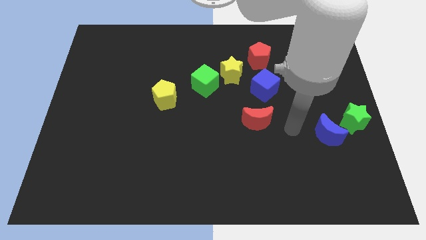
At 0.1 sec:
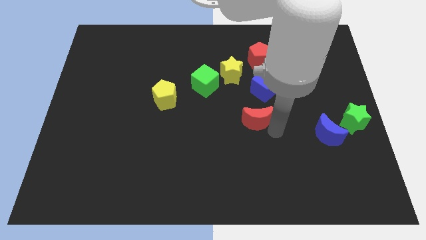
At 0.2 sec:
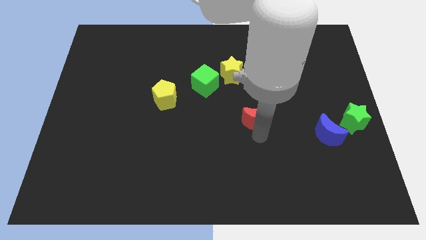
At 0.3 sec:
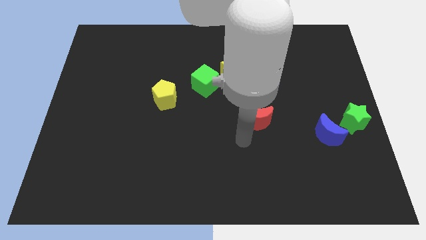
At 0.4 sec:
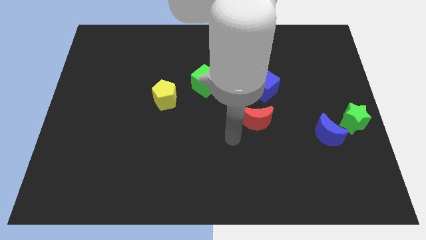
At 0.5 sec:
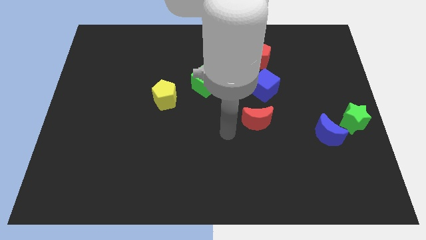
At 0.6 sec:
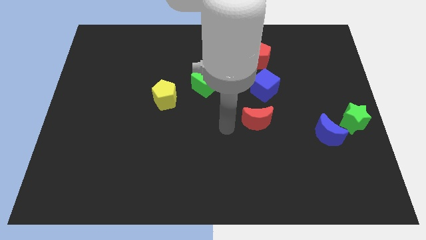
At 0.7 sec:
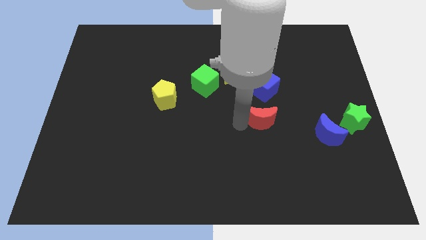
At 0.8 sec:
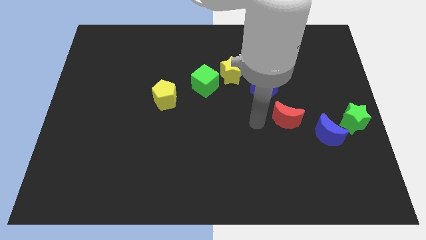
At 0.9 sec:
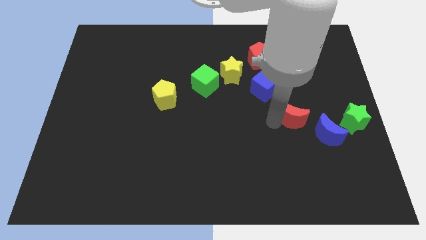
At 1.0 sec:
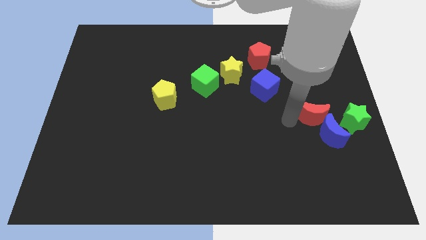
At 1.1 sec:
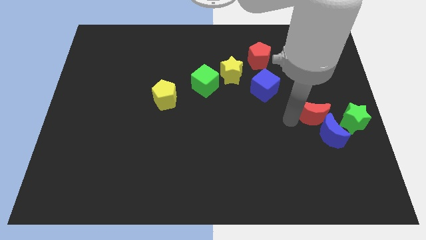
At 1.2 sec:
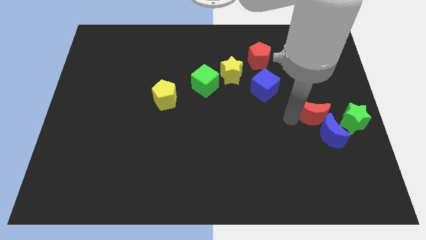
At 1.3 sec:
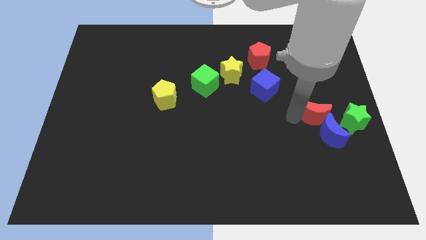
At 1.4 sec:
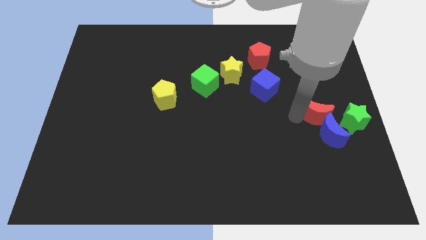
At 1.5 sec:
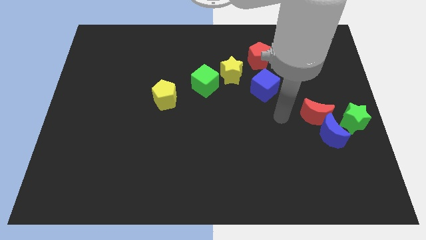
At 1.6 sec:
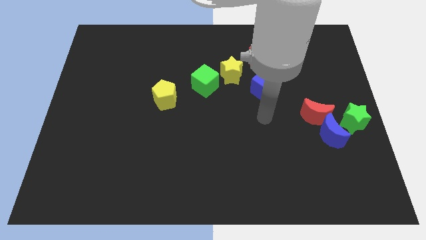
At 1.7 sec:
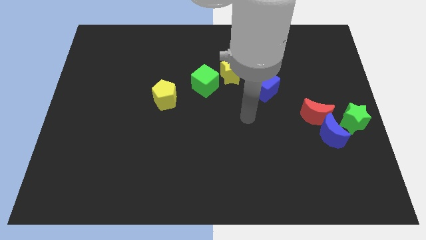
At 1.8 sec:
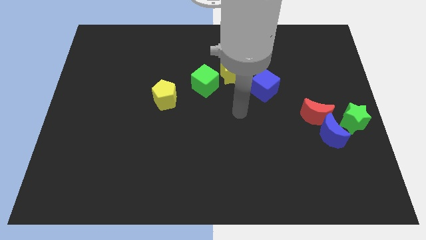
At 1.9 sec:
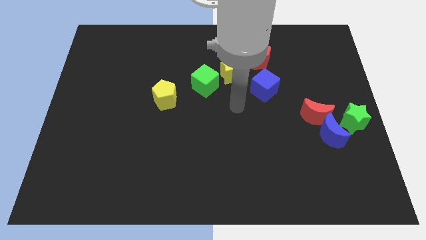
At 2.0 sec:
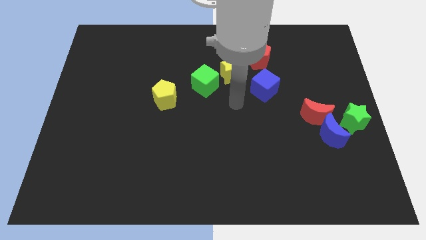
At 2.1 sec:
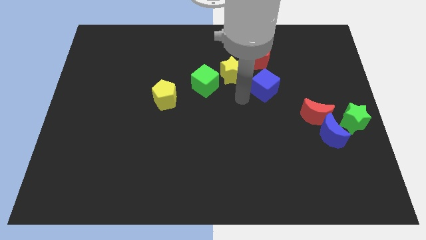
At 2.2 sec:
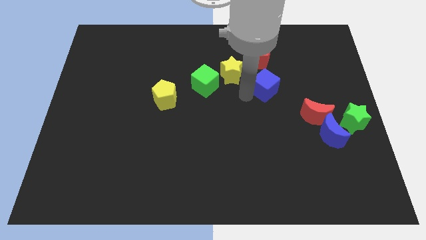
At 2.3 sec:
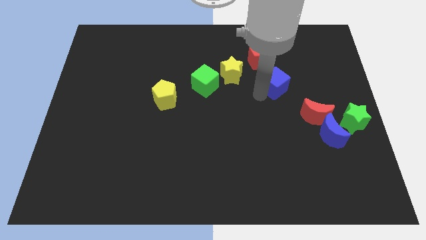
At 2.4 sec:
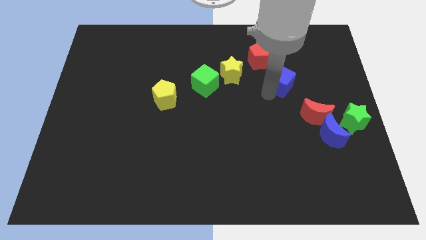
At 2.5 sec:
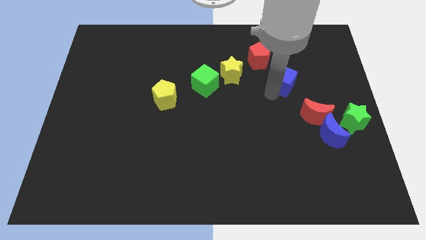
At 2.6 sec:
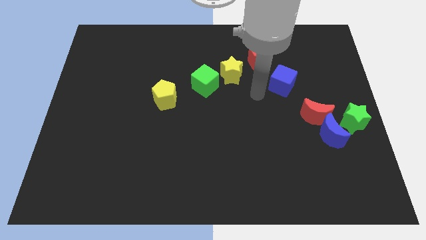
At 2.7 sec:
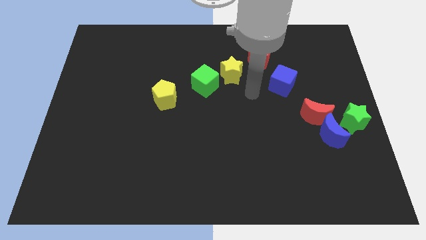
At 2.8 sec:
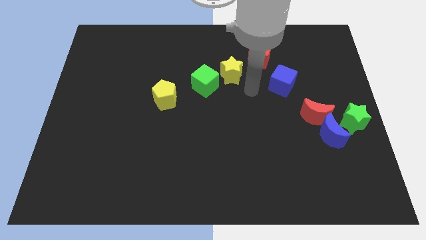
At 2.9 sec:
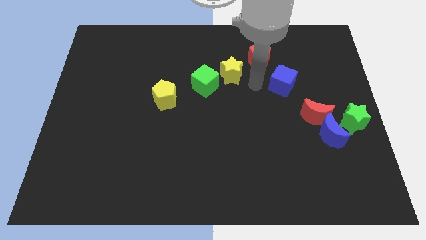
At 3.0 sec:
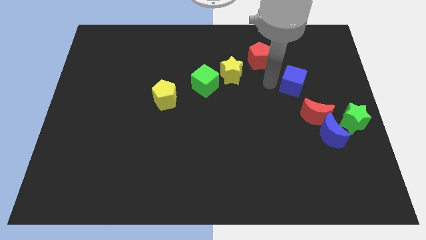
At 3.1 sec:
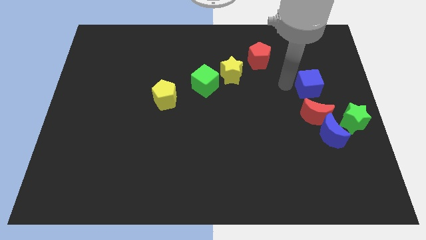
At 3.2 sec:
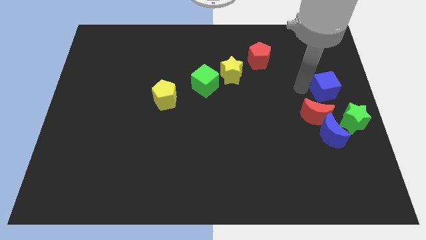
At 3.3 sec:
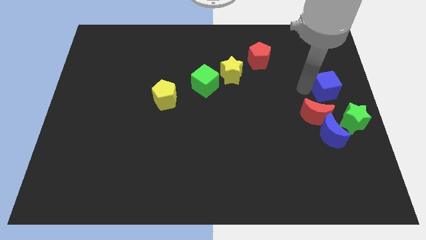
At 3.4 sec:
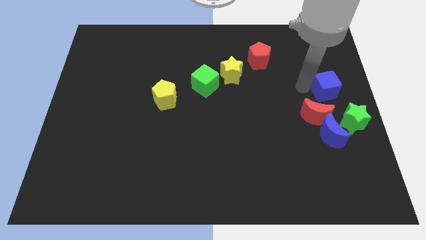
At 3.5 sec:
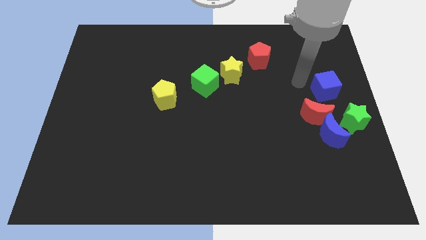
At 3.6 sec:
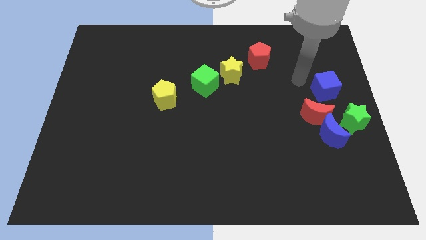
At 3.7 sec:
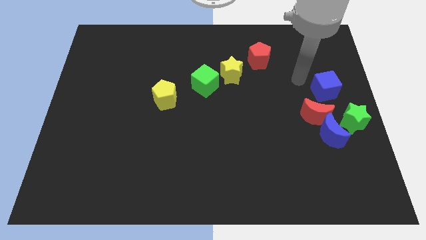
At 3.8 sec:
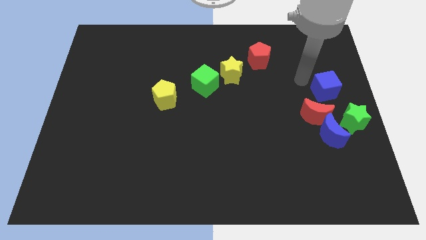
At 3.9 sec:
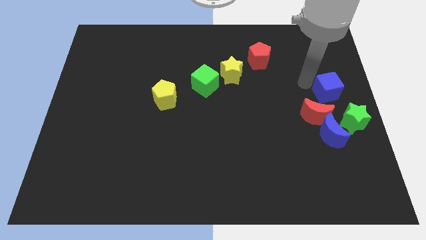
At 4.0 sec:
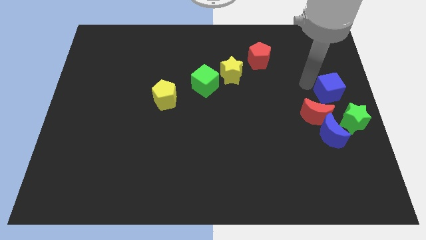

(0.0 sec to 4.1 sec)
move the red crescent and the blue cube to the right center of the board

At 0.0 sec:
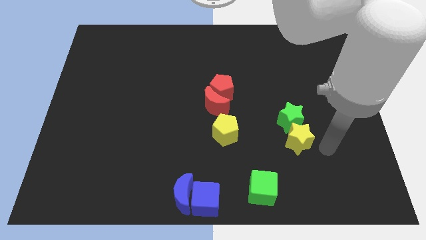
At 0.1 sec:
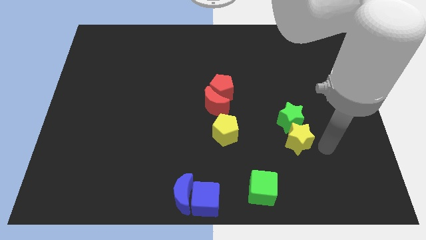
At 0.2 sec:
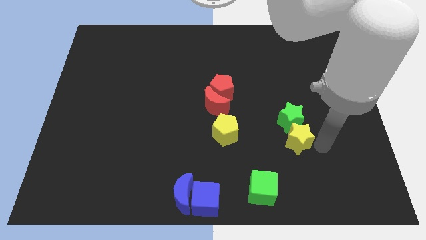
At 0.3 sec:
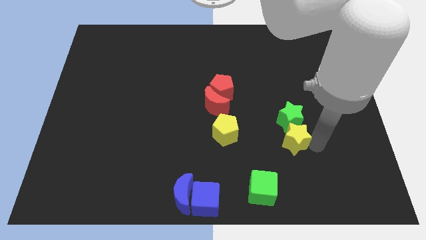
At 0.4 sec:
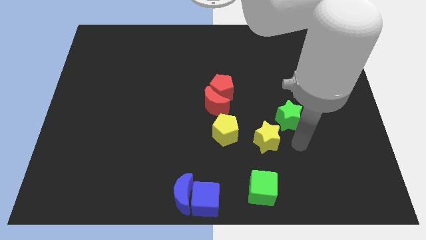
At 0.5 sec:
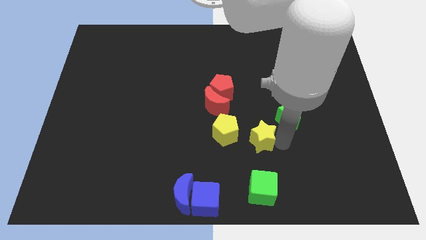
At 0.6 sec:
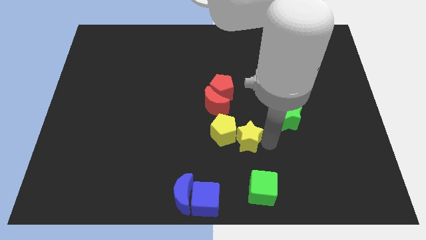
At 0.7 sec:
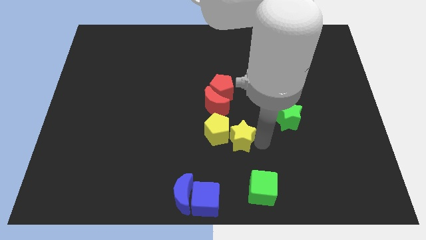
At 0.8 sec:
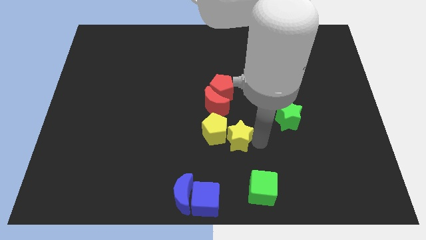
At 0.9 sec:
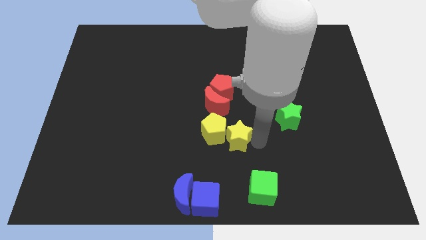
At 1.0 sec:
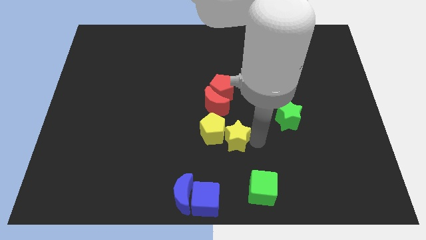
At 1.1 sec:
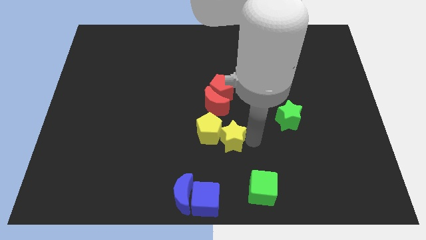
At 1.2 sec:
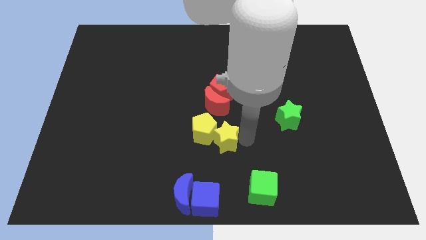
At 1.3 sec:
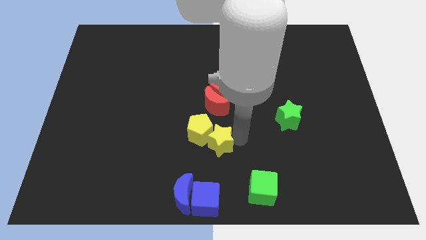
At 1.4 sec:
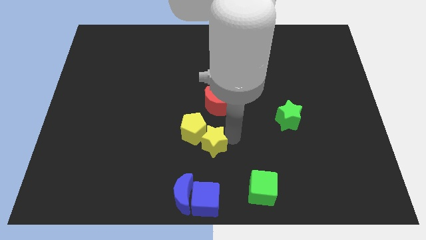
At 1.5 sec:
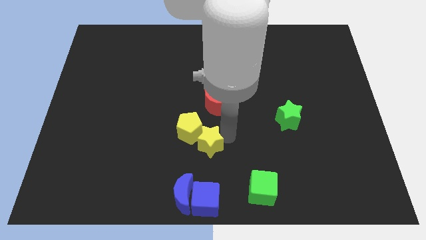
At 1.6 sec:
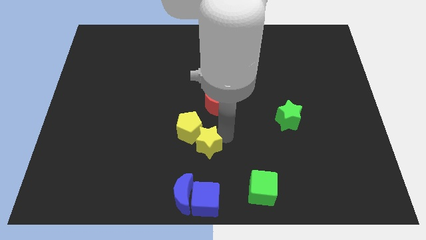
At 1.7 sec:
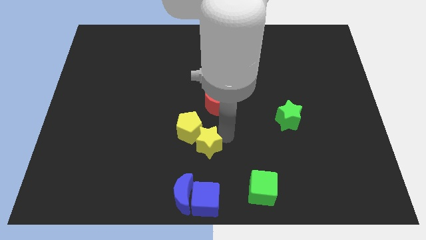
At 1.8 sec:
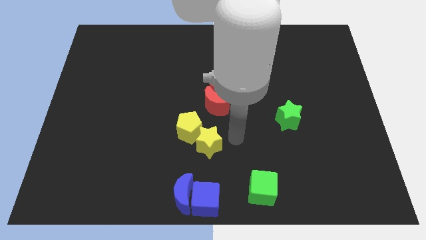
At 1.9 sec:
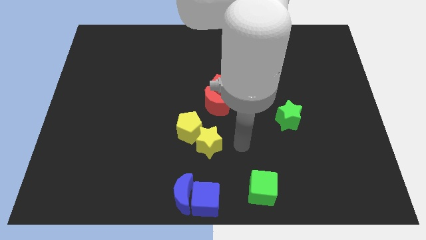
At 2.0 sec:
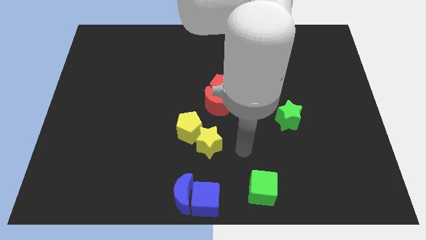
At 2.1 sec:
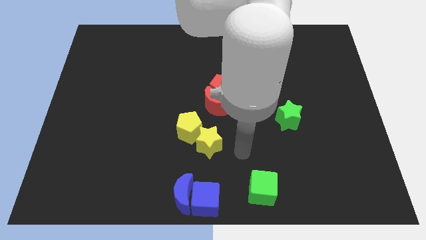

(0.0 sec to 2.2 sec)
push the yellow star into the yellow pentagon

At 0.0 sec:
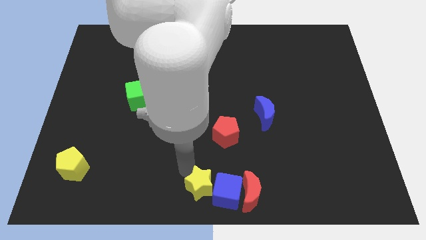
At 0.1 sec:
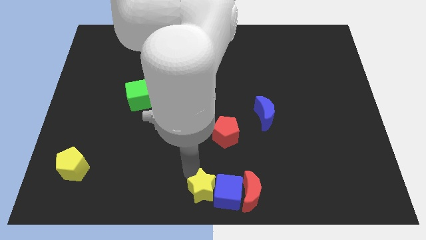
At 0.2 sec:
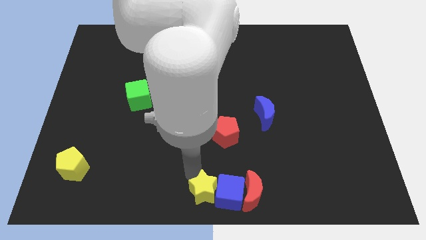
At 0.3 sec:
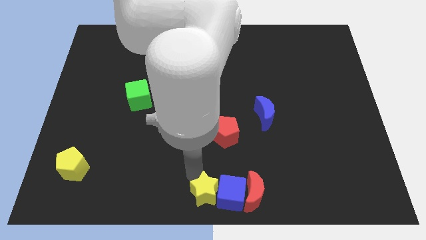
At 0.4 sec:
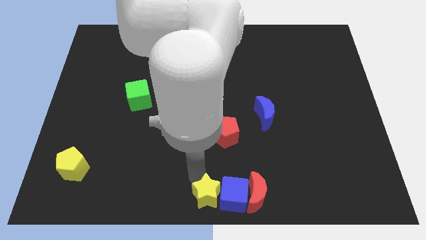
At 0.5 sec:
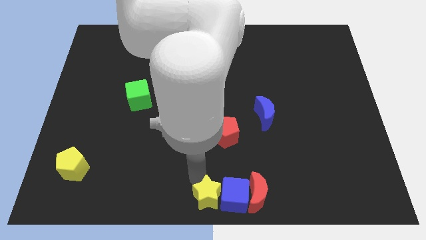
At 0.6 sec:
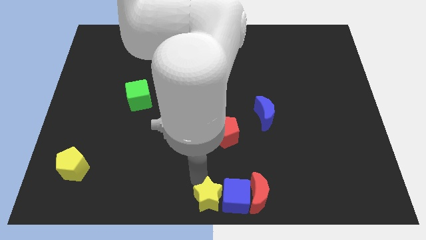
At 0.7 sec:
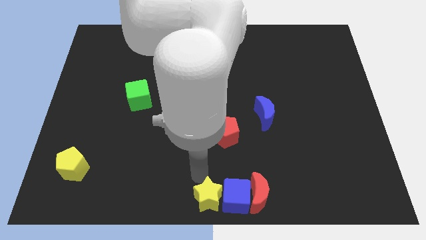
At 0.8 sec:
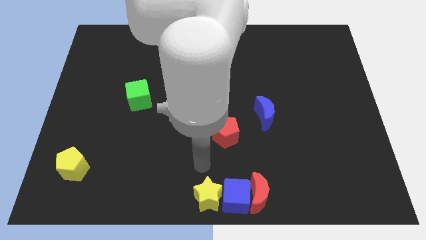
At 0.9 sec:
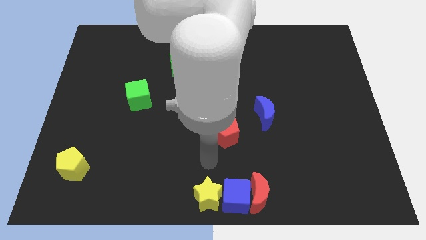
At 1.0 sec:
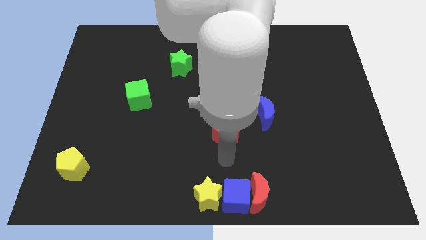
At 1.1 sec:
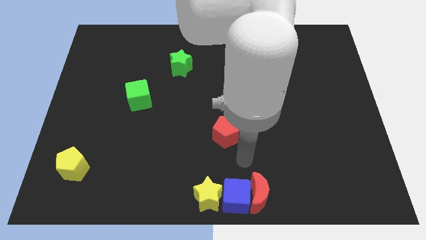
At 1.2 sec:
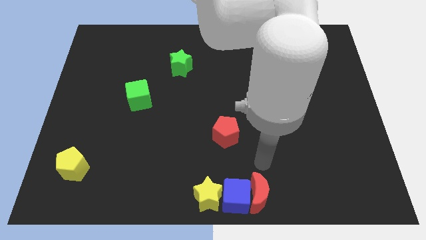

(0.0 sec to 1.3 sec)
push yellow star into blue cube

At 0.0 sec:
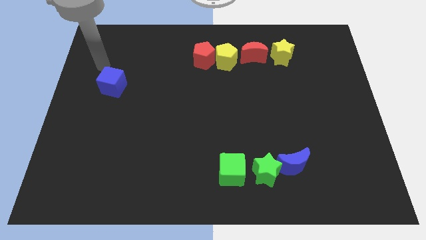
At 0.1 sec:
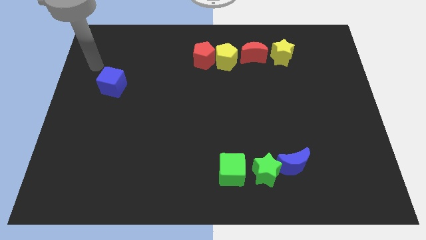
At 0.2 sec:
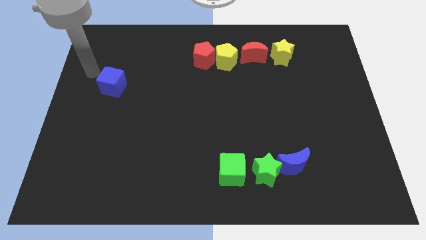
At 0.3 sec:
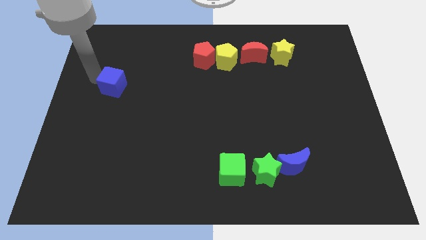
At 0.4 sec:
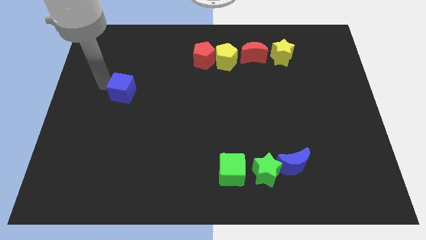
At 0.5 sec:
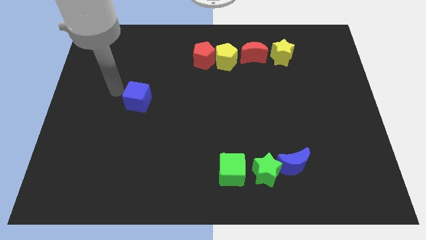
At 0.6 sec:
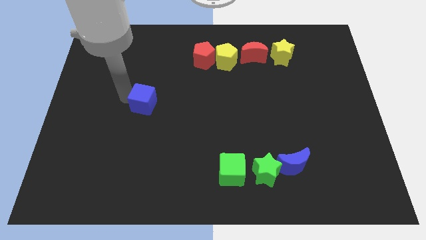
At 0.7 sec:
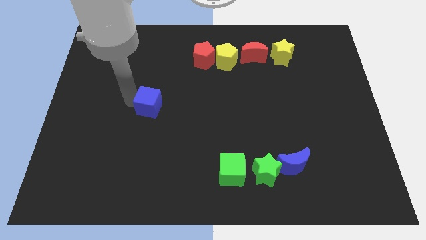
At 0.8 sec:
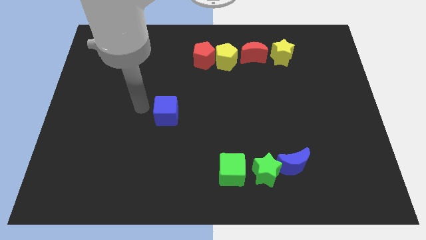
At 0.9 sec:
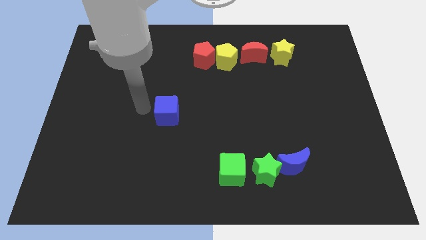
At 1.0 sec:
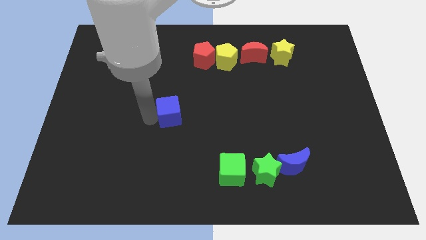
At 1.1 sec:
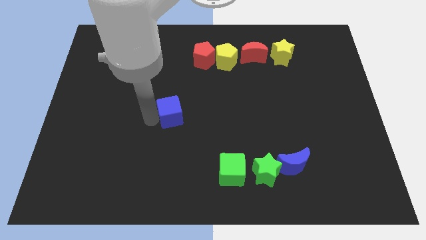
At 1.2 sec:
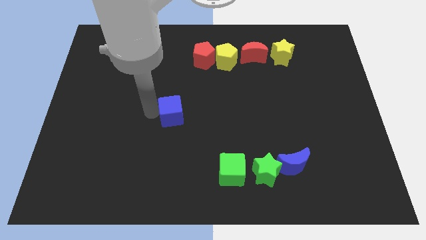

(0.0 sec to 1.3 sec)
slide the blue cube towards the green cube
